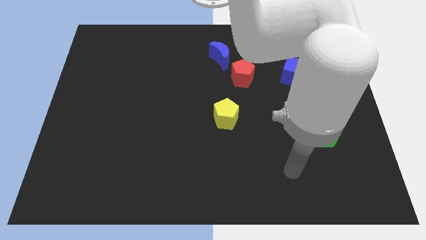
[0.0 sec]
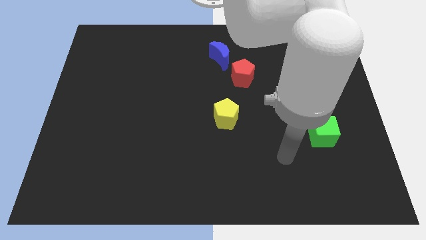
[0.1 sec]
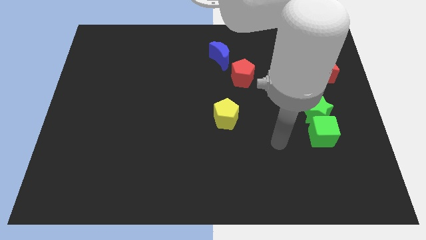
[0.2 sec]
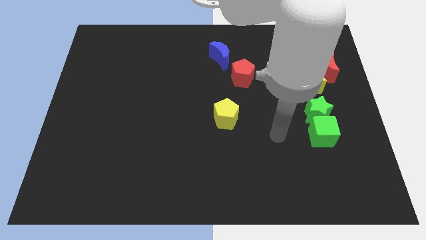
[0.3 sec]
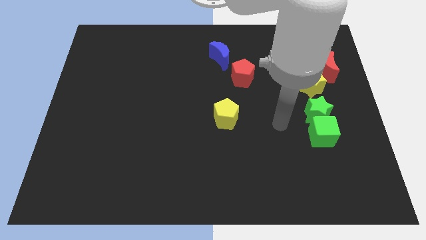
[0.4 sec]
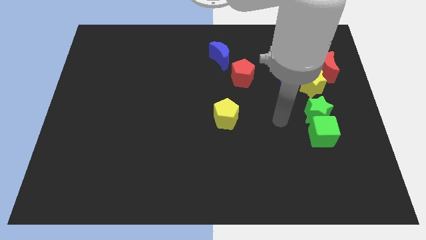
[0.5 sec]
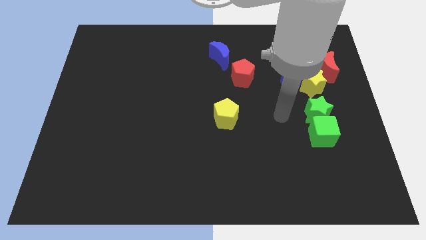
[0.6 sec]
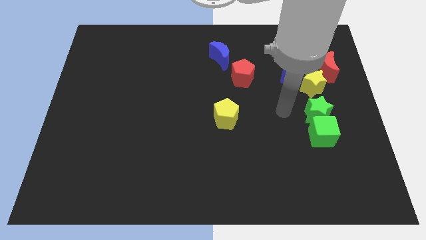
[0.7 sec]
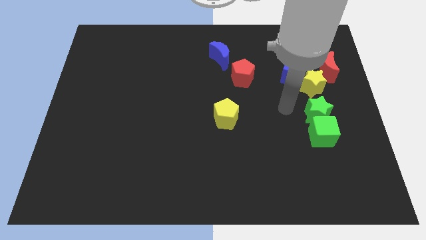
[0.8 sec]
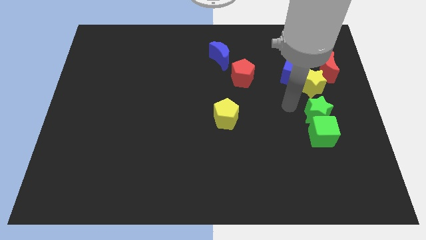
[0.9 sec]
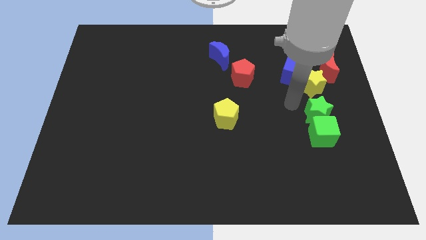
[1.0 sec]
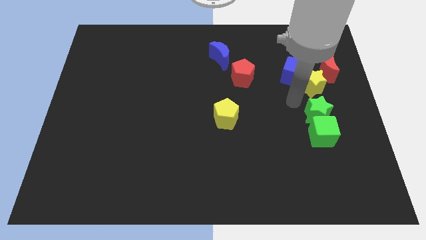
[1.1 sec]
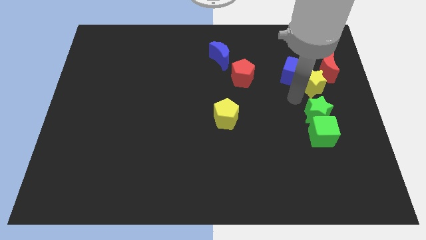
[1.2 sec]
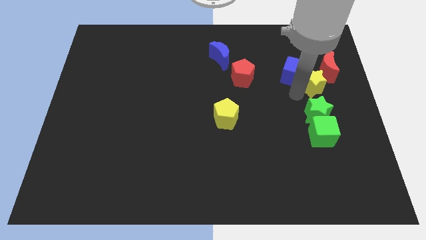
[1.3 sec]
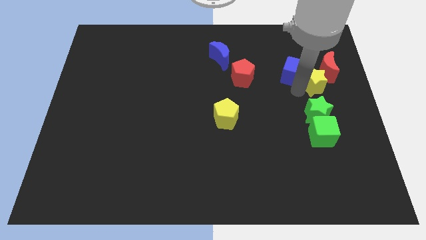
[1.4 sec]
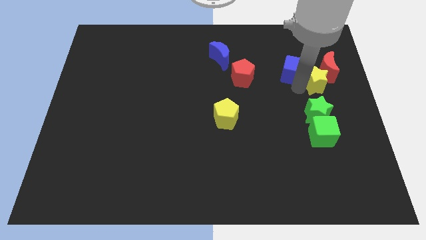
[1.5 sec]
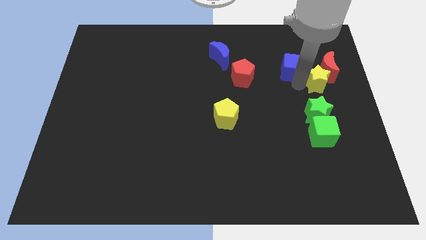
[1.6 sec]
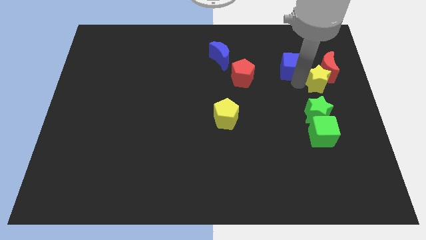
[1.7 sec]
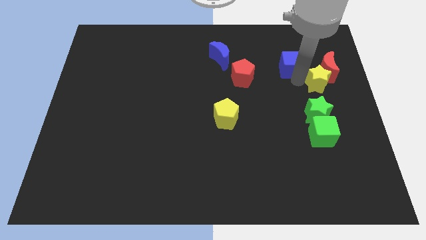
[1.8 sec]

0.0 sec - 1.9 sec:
move the yellow star to the bottom left side of the red moon

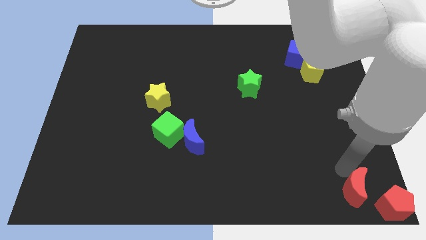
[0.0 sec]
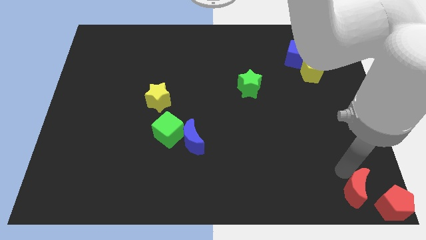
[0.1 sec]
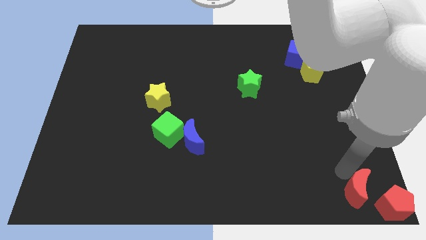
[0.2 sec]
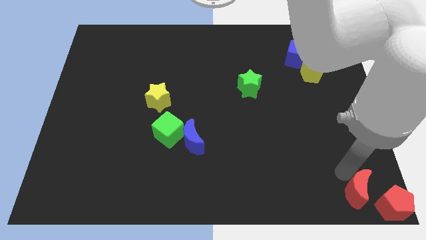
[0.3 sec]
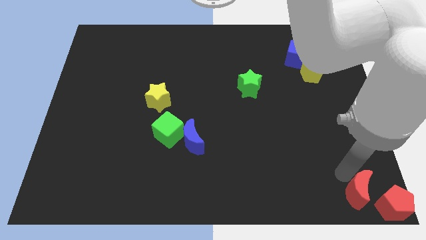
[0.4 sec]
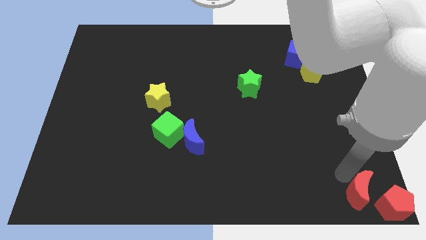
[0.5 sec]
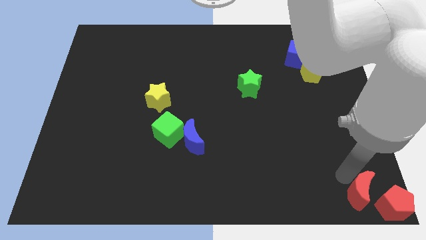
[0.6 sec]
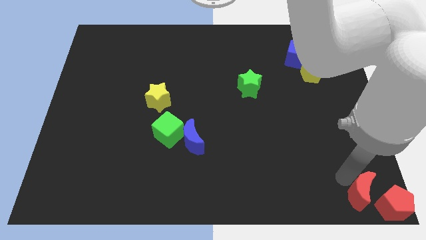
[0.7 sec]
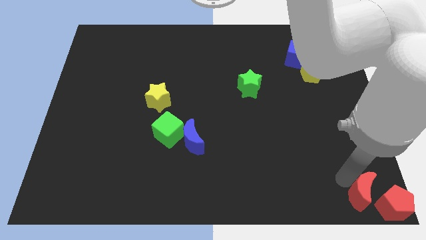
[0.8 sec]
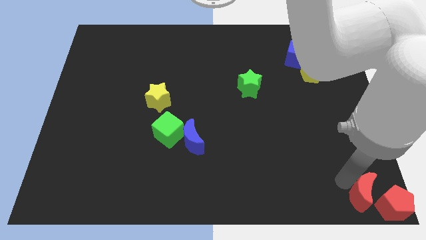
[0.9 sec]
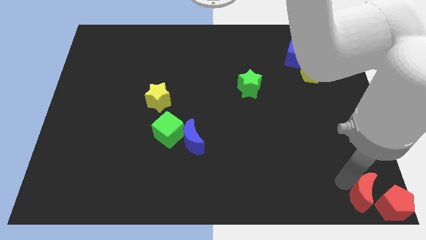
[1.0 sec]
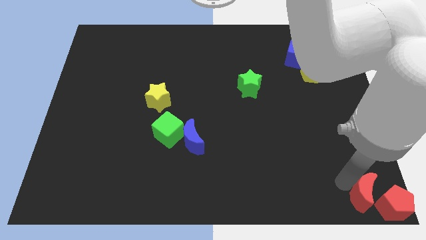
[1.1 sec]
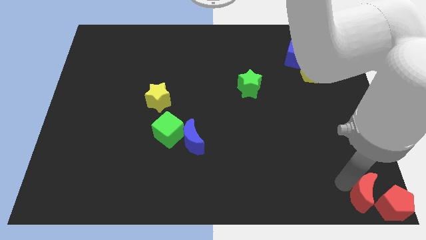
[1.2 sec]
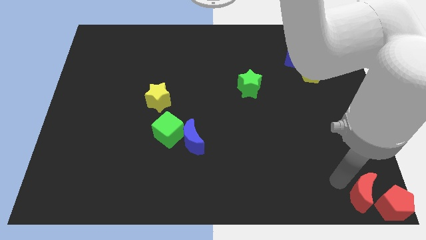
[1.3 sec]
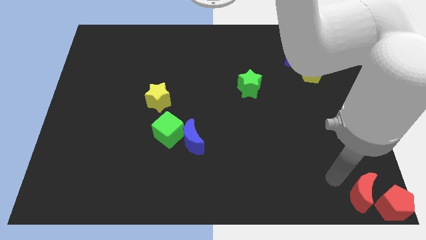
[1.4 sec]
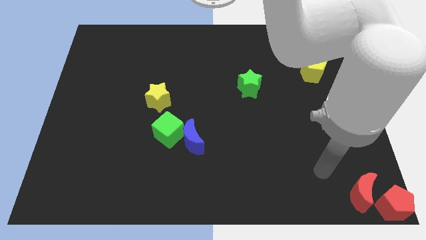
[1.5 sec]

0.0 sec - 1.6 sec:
move the red moon close to the red pentagon

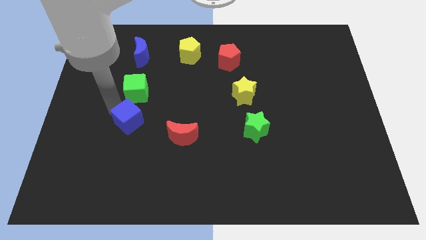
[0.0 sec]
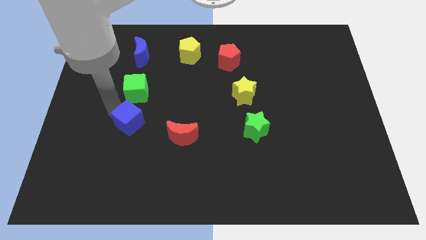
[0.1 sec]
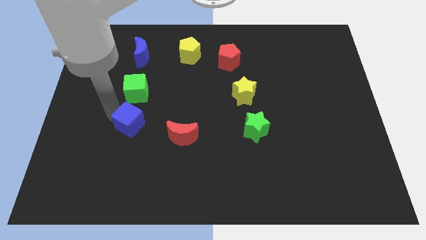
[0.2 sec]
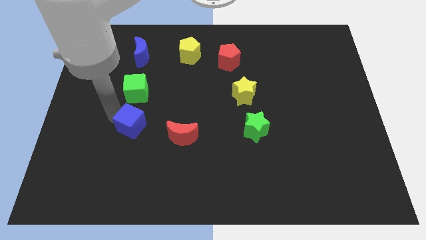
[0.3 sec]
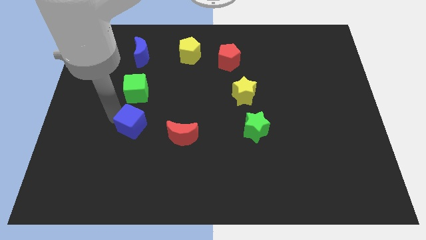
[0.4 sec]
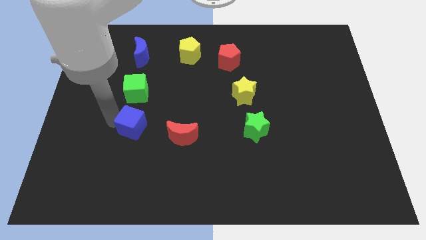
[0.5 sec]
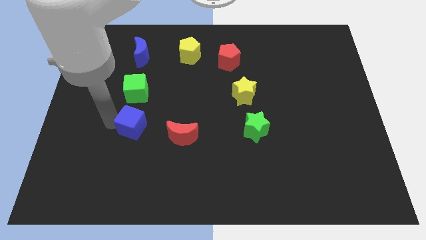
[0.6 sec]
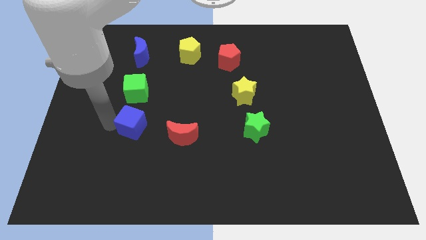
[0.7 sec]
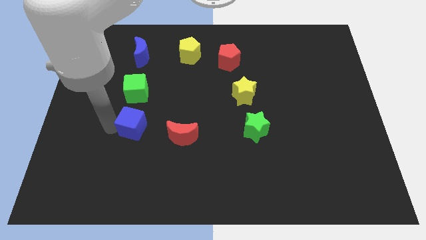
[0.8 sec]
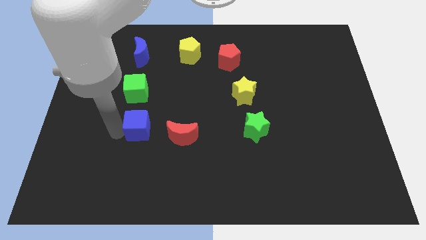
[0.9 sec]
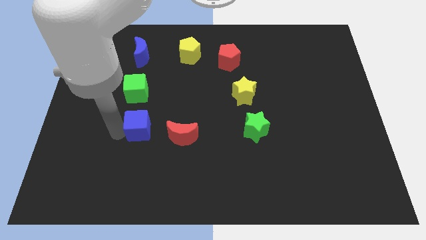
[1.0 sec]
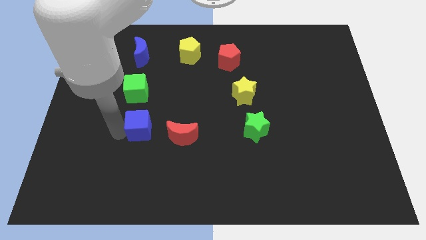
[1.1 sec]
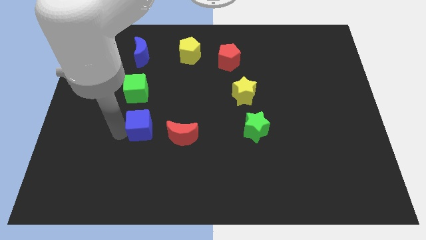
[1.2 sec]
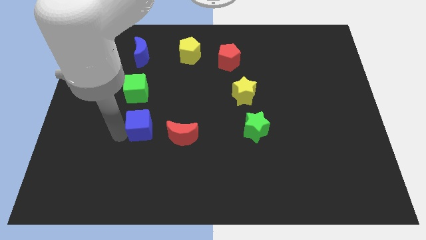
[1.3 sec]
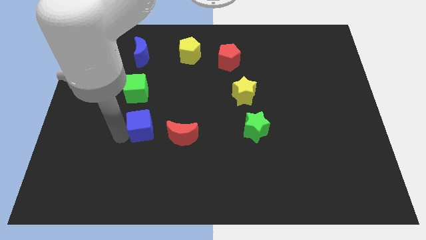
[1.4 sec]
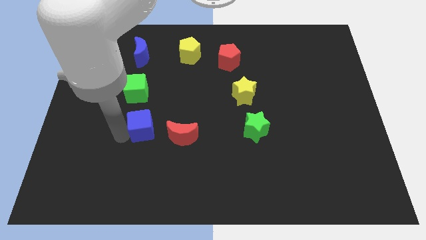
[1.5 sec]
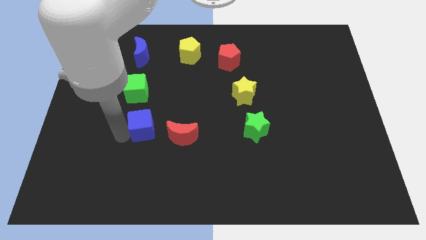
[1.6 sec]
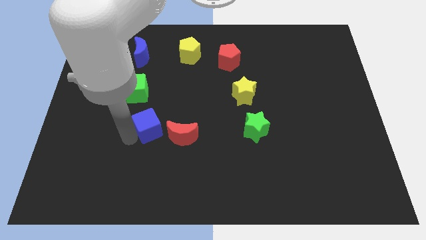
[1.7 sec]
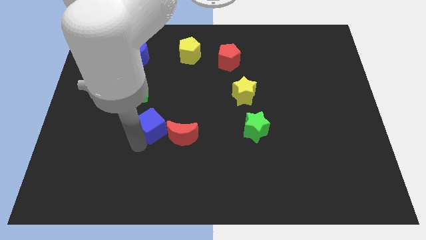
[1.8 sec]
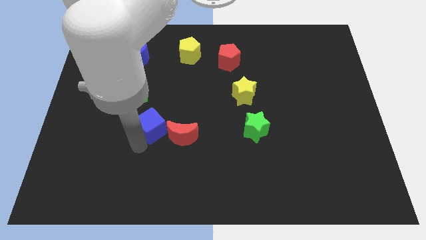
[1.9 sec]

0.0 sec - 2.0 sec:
push the blue cube to the left of red crescent

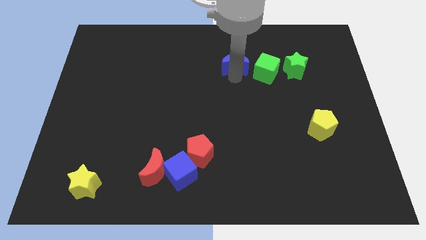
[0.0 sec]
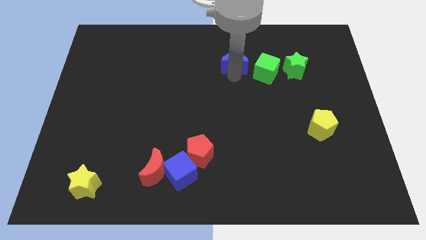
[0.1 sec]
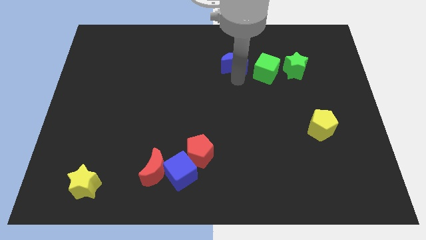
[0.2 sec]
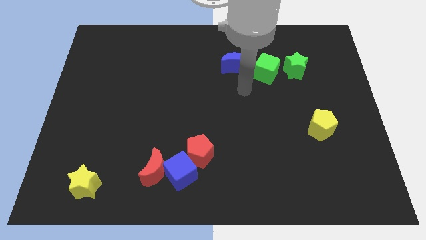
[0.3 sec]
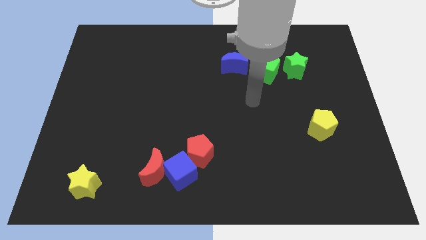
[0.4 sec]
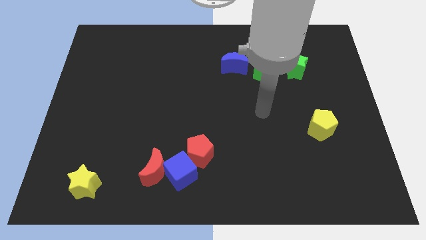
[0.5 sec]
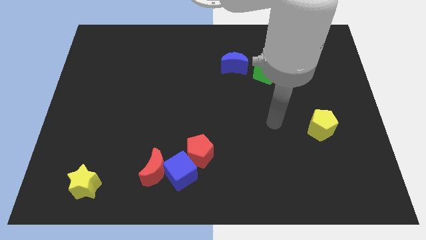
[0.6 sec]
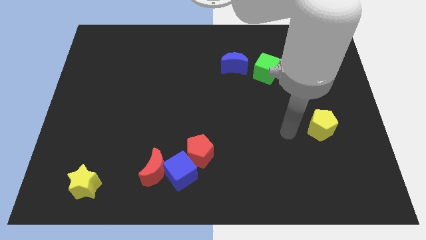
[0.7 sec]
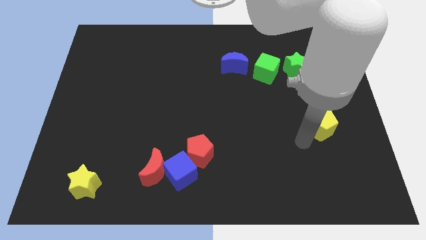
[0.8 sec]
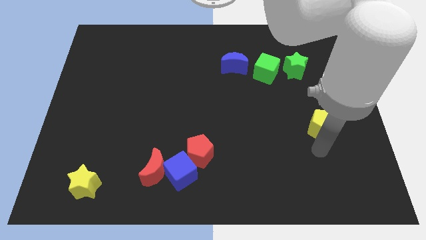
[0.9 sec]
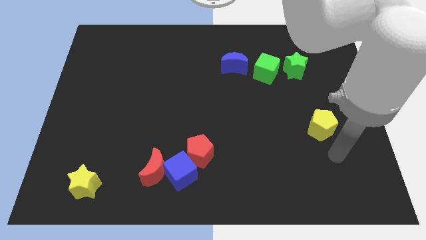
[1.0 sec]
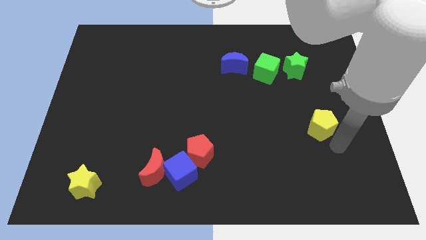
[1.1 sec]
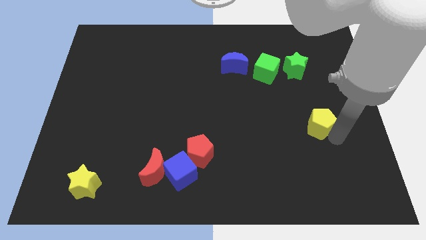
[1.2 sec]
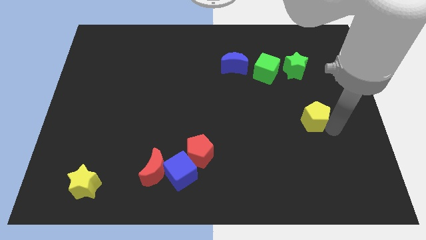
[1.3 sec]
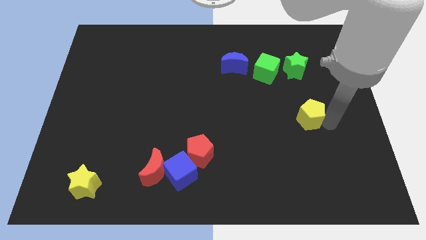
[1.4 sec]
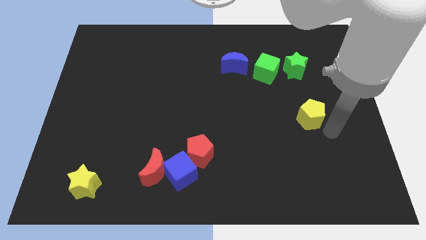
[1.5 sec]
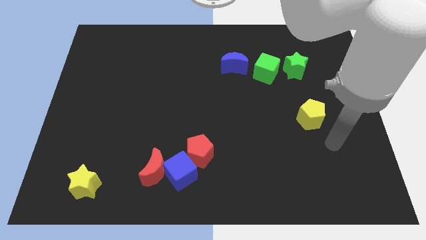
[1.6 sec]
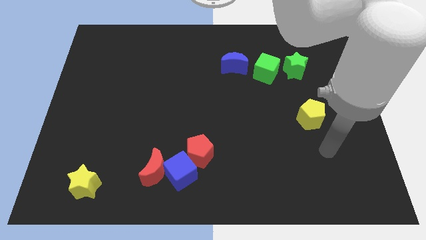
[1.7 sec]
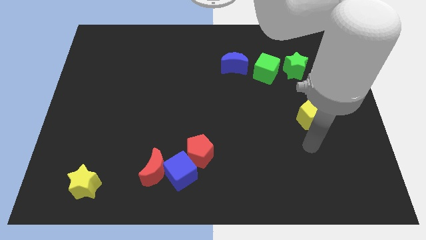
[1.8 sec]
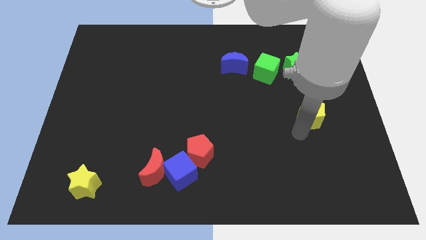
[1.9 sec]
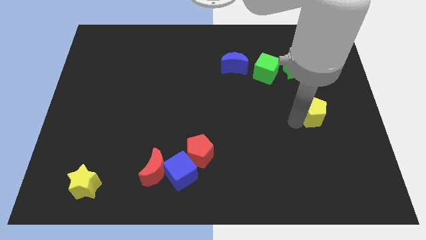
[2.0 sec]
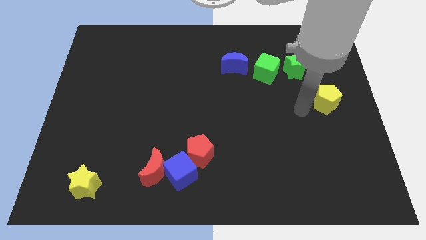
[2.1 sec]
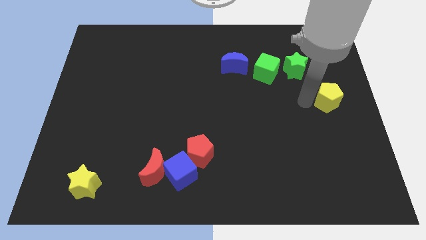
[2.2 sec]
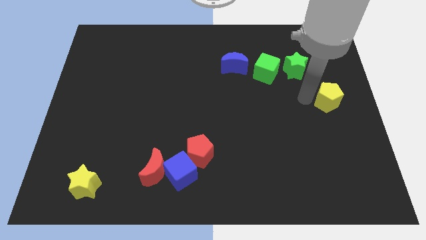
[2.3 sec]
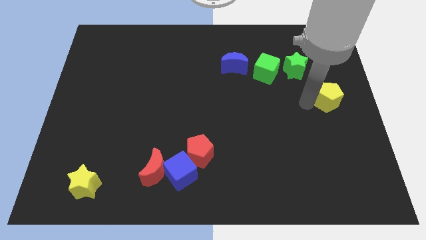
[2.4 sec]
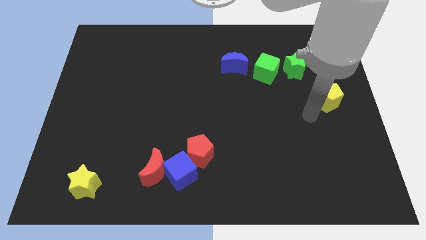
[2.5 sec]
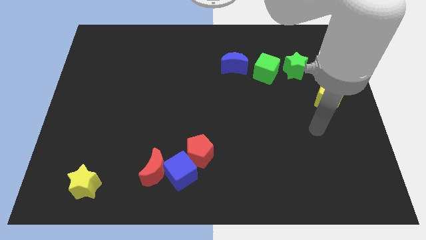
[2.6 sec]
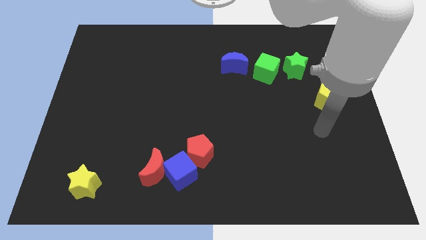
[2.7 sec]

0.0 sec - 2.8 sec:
move the yellow pentagon diagonally to the bottom right of the green star

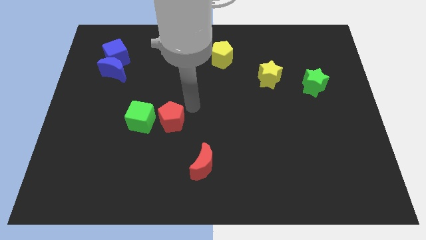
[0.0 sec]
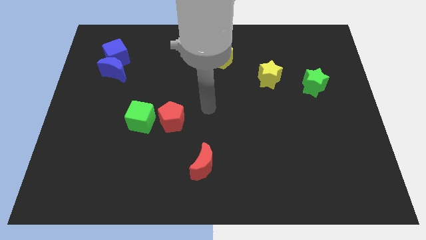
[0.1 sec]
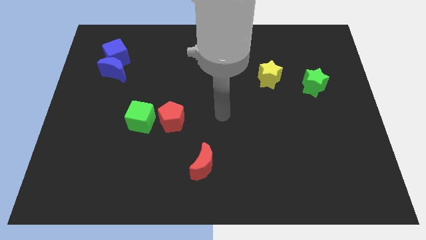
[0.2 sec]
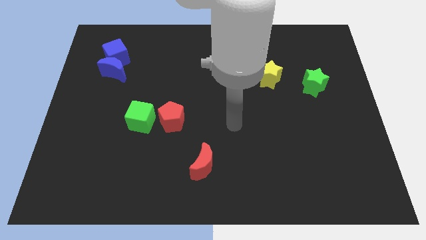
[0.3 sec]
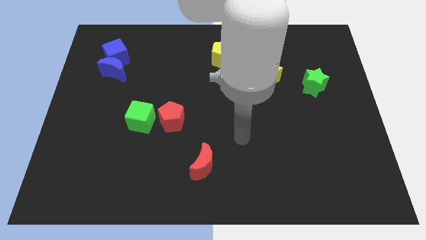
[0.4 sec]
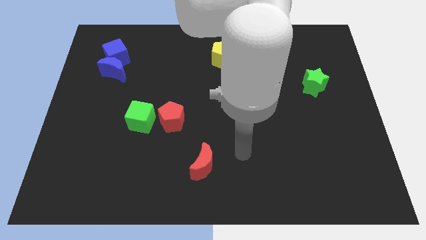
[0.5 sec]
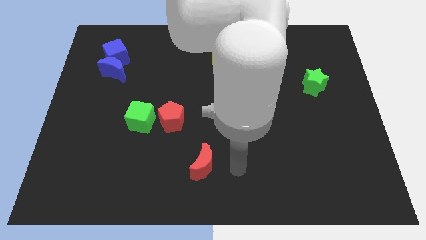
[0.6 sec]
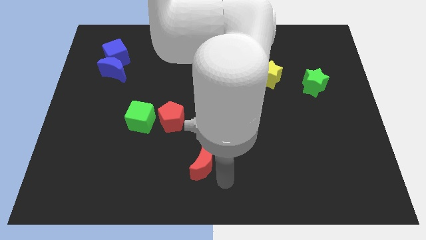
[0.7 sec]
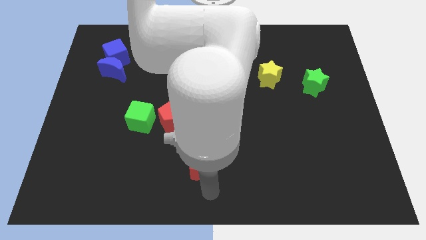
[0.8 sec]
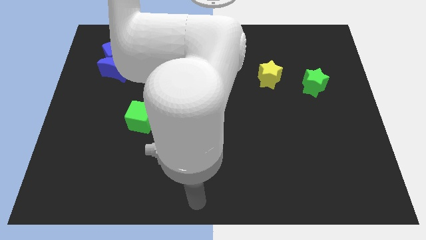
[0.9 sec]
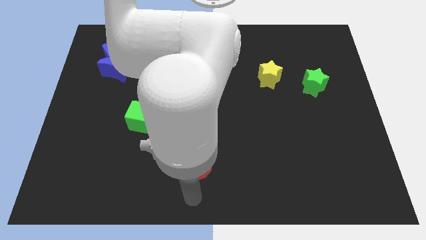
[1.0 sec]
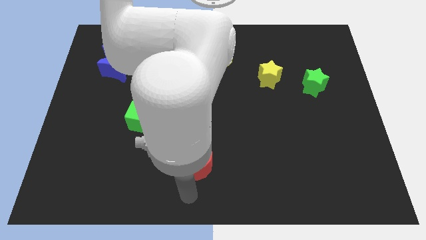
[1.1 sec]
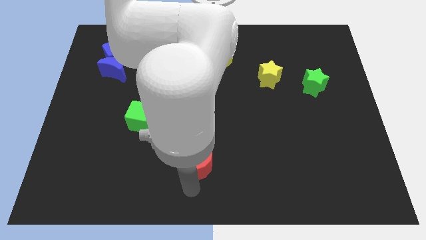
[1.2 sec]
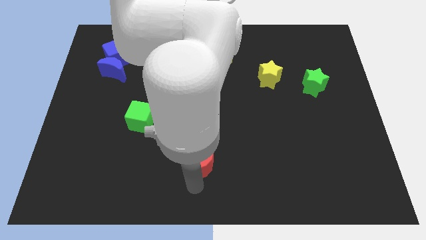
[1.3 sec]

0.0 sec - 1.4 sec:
place your arm at the bottom side of the red moon
